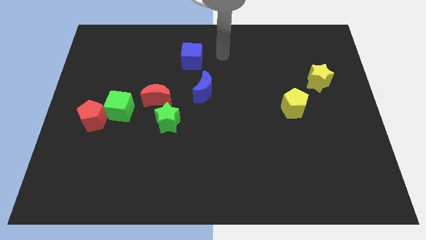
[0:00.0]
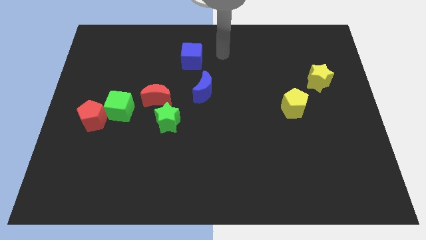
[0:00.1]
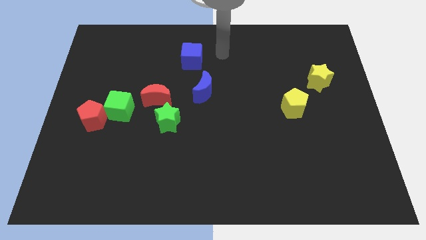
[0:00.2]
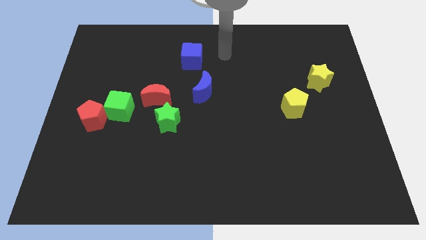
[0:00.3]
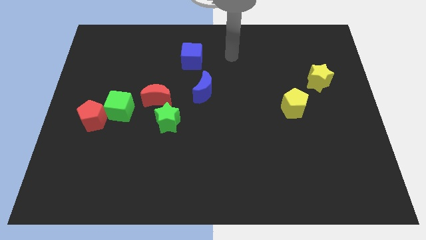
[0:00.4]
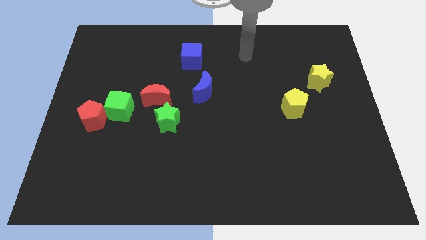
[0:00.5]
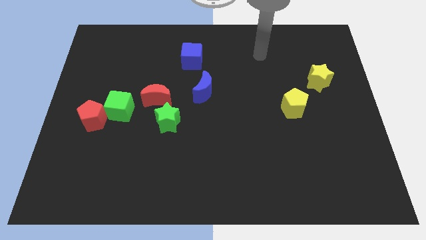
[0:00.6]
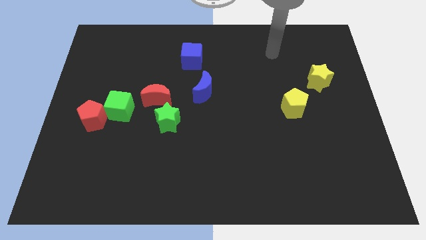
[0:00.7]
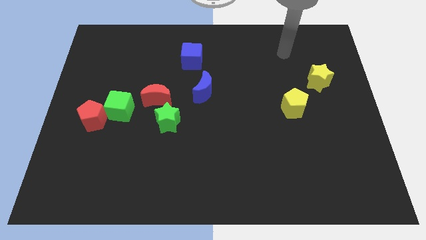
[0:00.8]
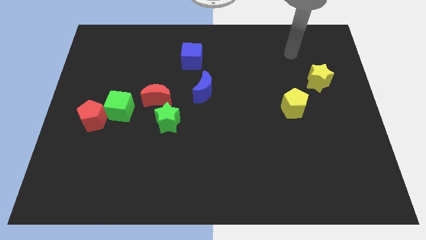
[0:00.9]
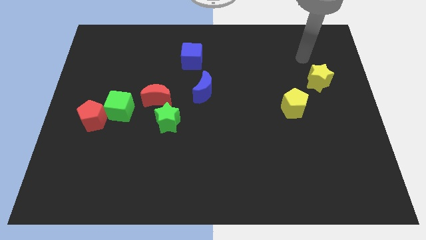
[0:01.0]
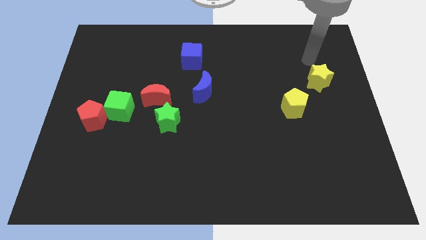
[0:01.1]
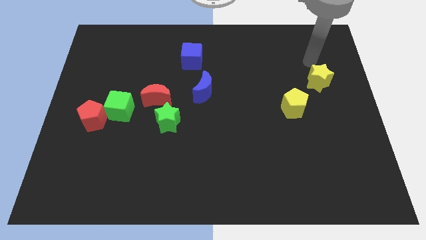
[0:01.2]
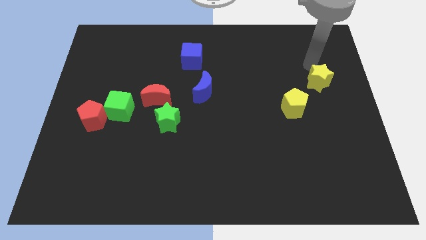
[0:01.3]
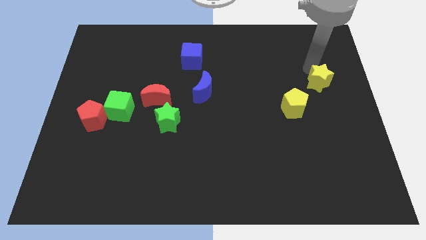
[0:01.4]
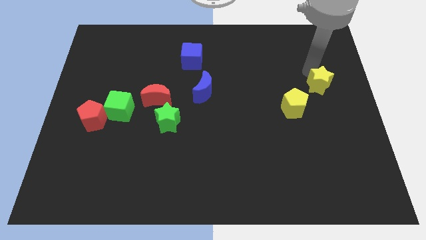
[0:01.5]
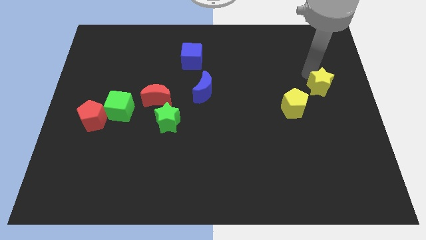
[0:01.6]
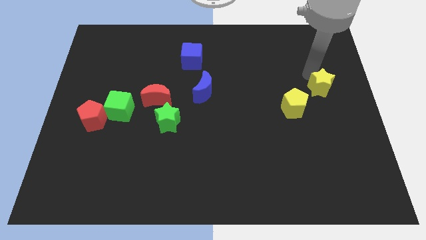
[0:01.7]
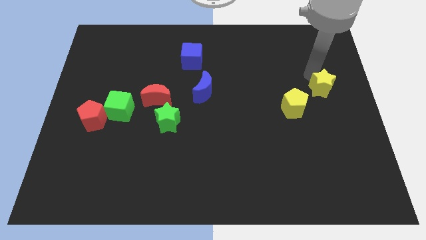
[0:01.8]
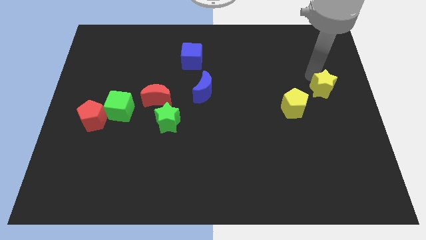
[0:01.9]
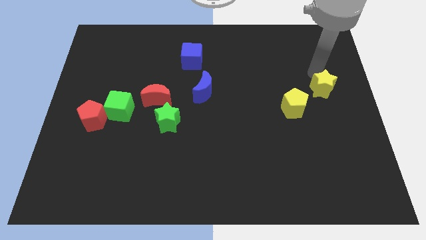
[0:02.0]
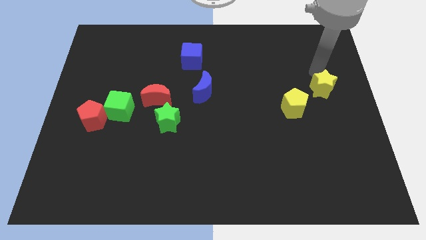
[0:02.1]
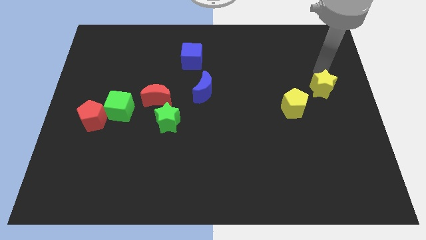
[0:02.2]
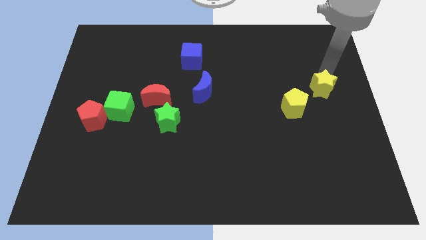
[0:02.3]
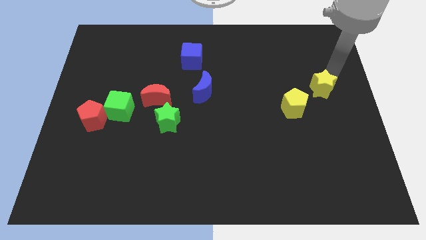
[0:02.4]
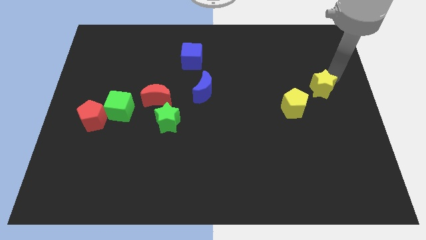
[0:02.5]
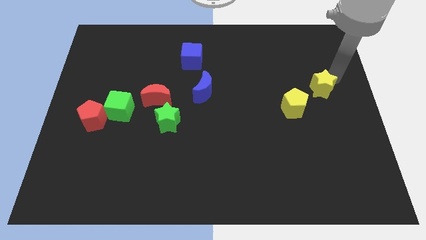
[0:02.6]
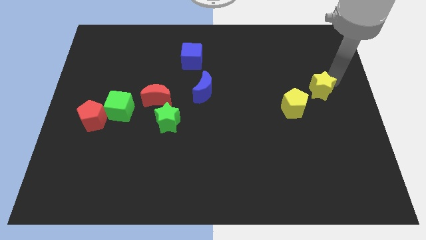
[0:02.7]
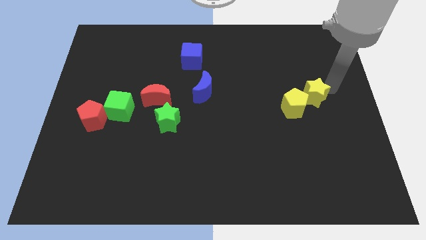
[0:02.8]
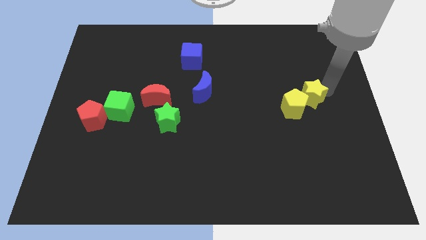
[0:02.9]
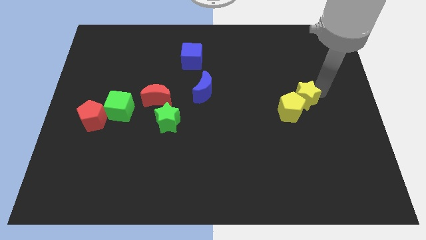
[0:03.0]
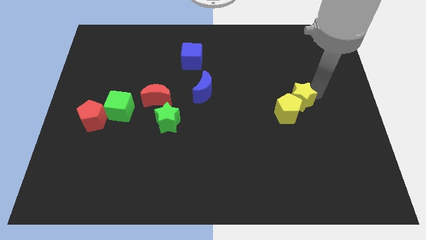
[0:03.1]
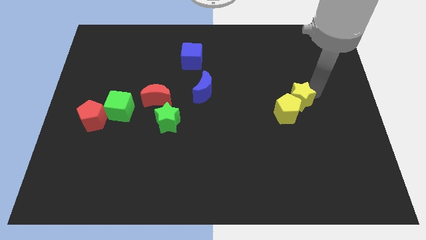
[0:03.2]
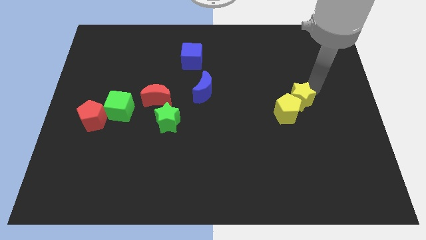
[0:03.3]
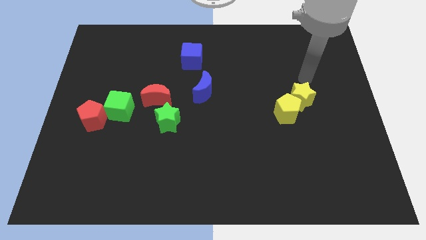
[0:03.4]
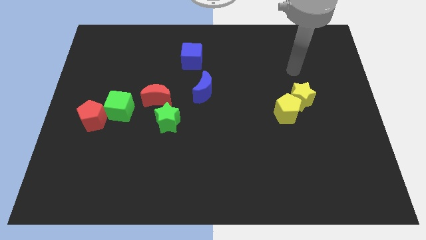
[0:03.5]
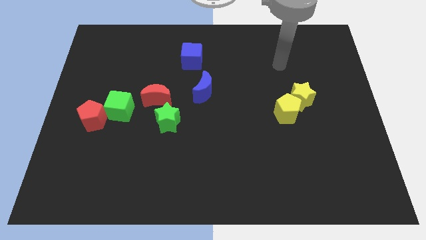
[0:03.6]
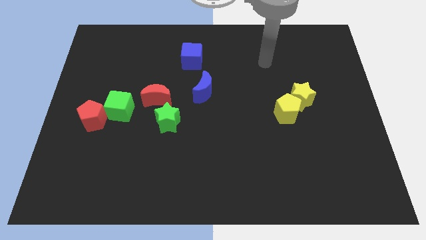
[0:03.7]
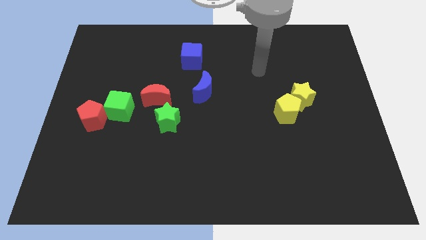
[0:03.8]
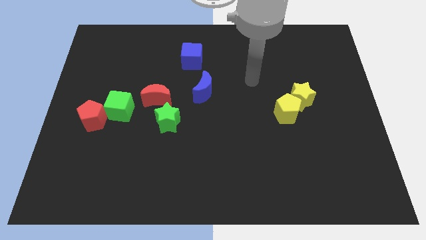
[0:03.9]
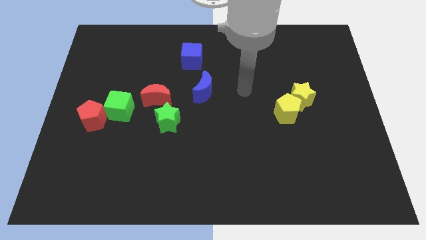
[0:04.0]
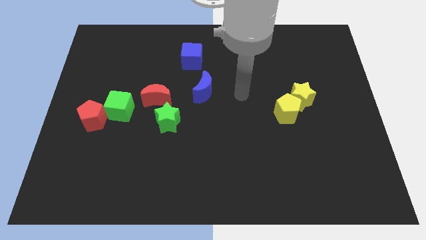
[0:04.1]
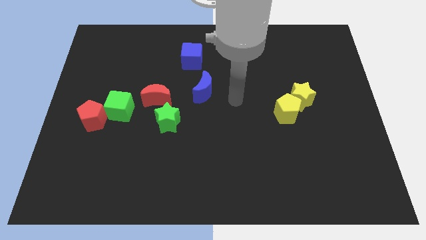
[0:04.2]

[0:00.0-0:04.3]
move yellow star and yellow pentagon slightly downwards

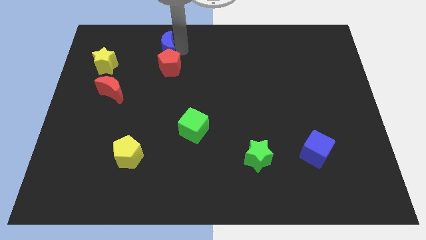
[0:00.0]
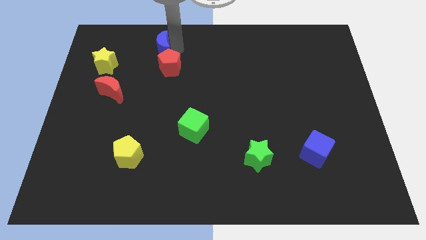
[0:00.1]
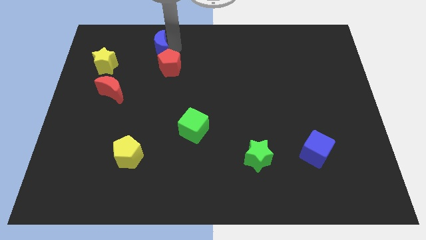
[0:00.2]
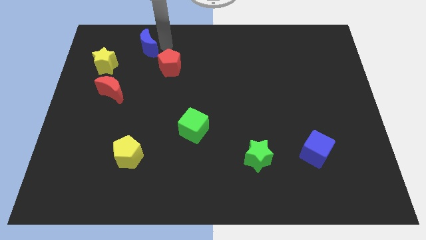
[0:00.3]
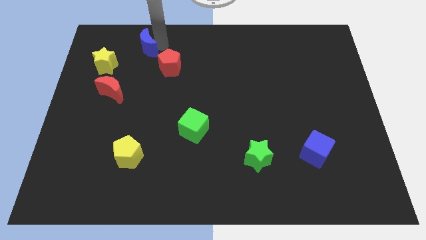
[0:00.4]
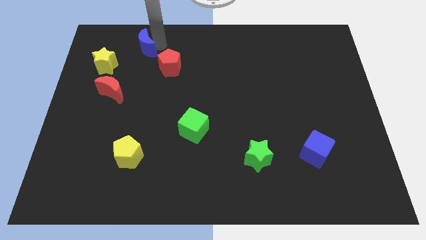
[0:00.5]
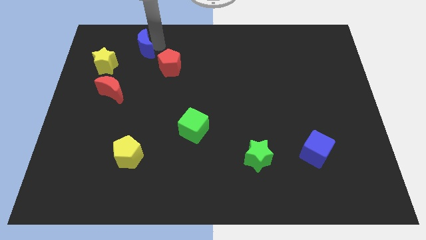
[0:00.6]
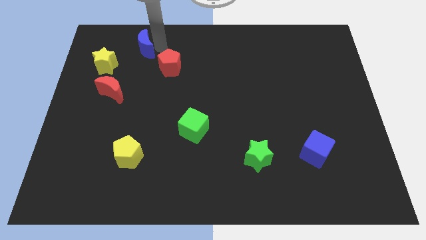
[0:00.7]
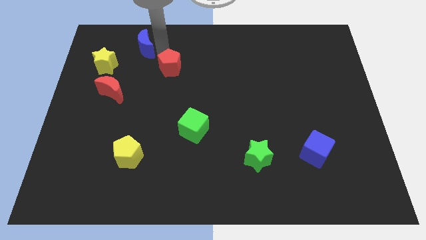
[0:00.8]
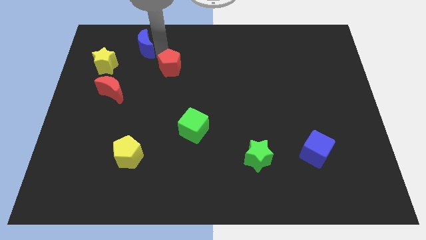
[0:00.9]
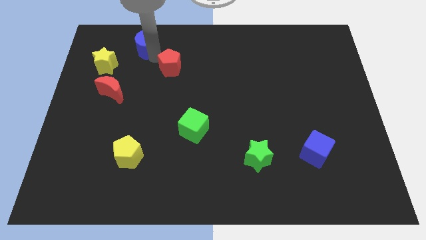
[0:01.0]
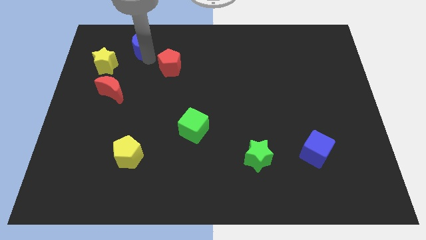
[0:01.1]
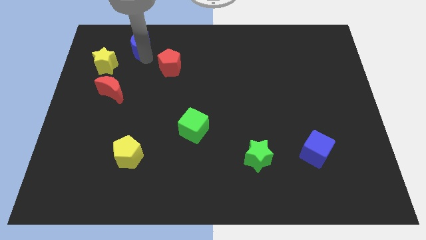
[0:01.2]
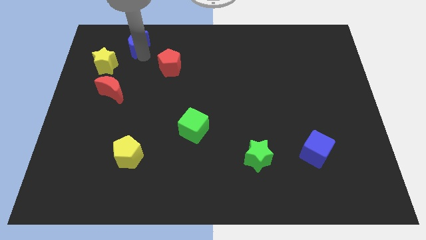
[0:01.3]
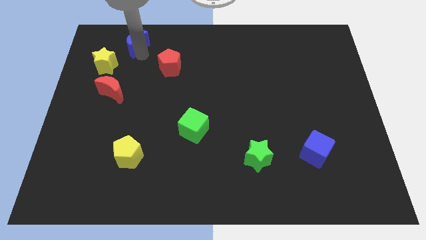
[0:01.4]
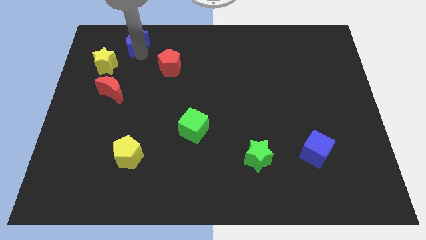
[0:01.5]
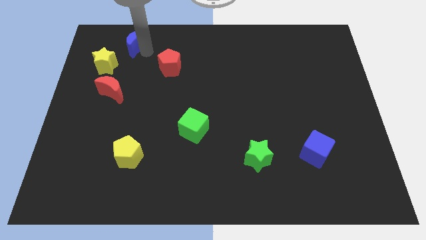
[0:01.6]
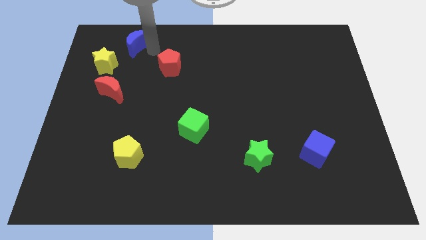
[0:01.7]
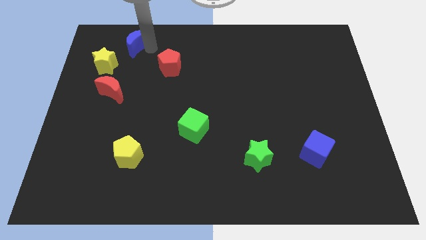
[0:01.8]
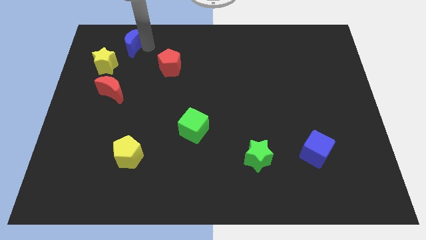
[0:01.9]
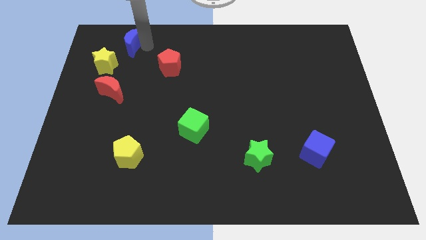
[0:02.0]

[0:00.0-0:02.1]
move the blue moon away from the top side of the red pentagon

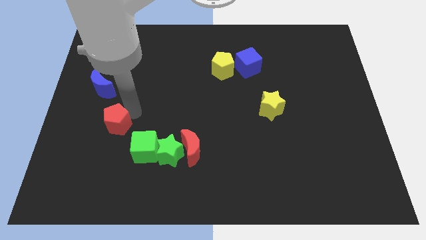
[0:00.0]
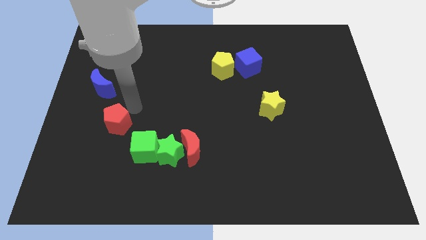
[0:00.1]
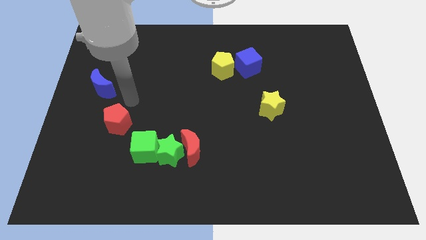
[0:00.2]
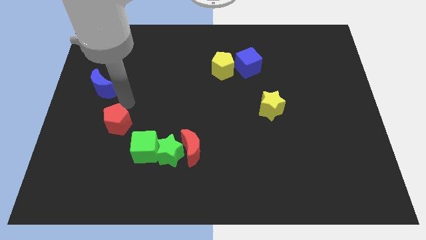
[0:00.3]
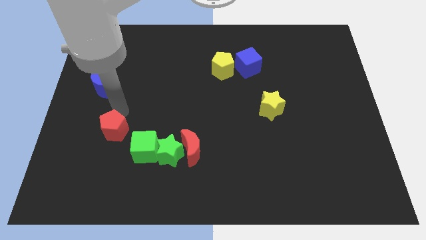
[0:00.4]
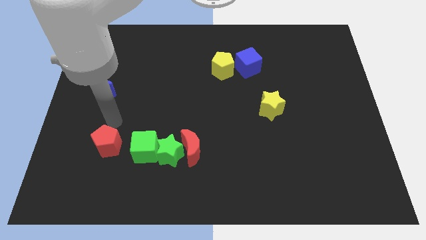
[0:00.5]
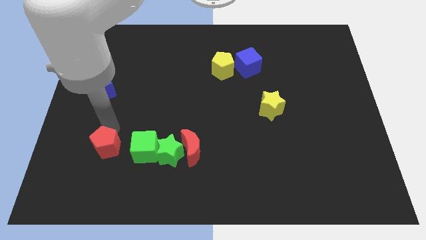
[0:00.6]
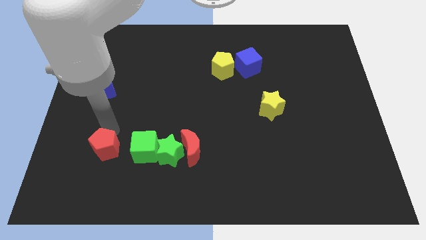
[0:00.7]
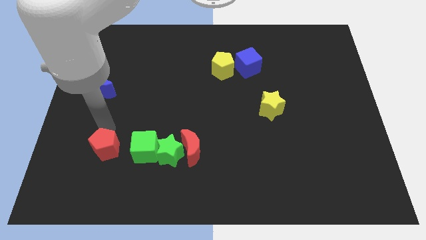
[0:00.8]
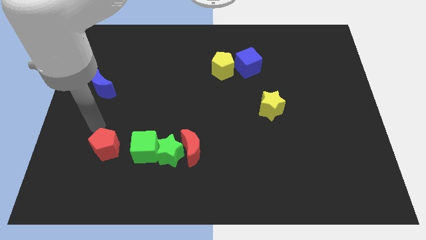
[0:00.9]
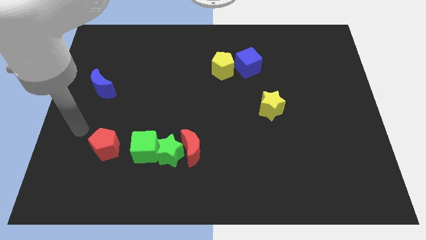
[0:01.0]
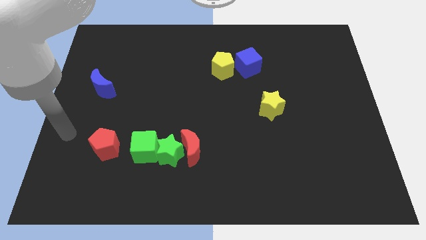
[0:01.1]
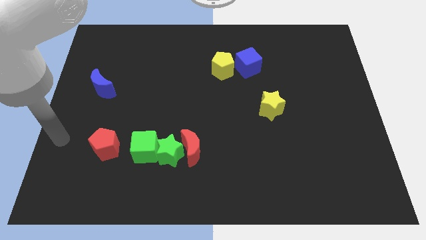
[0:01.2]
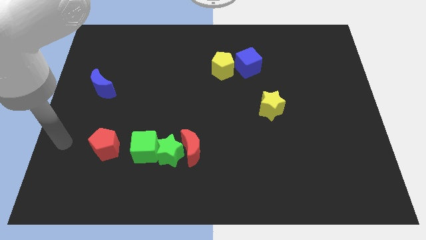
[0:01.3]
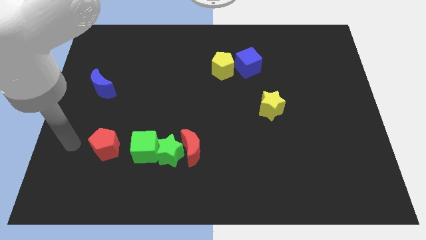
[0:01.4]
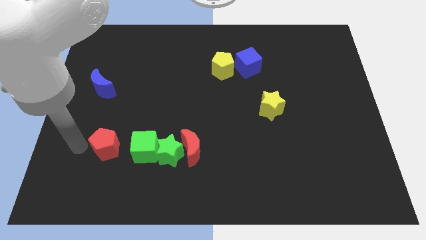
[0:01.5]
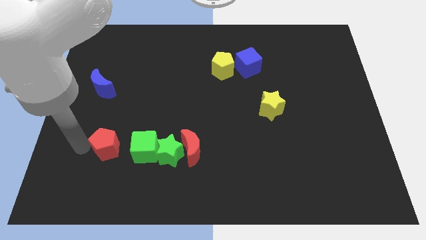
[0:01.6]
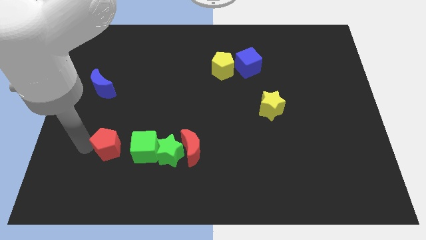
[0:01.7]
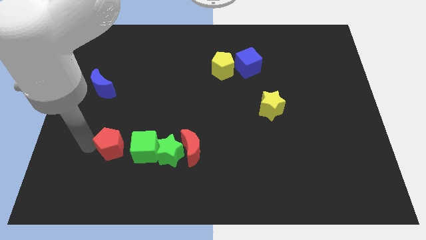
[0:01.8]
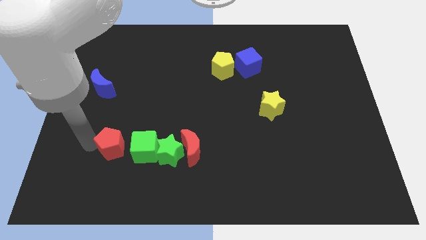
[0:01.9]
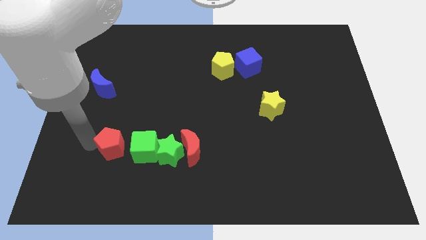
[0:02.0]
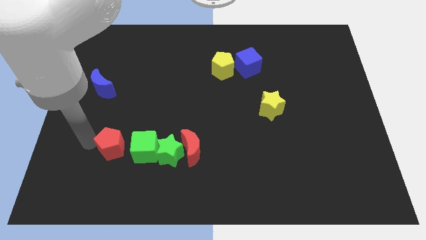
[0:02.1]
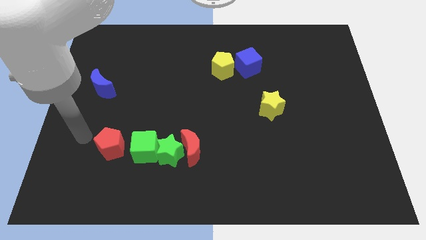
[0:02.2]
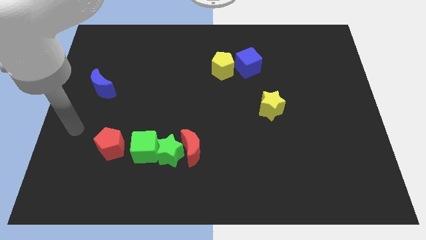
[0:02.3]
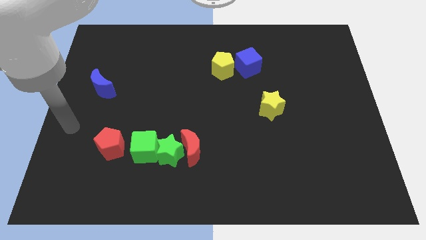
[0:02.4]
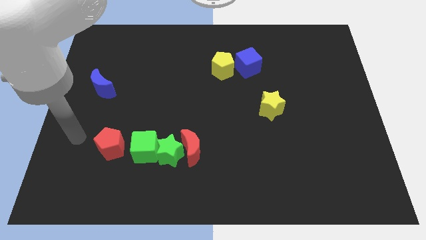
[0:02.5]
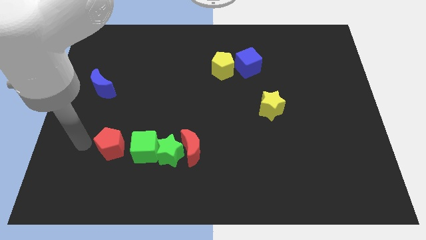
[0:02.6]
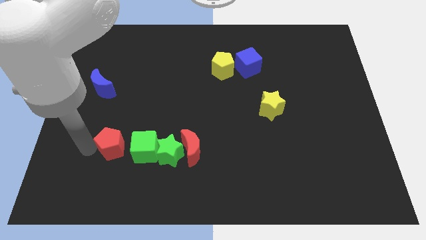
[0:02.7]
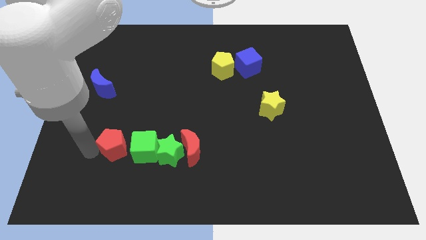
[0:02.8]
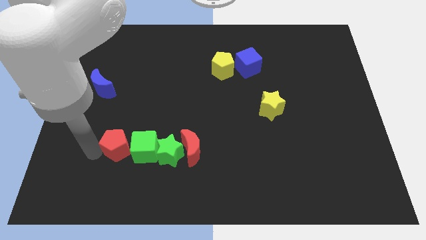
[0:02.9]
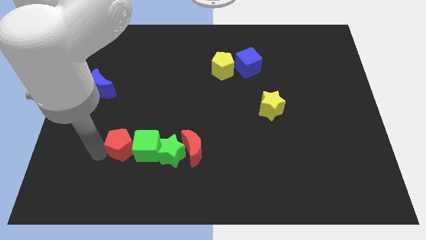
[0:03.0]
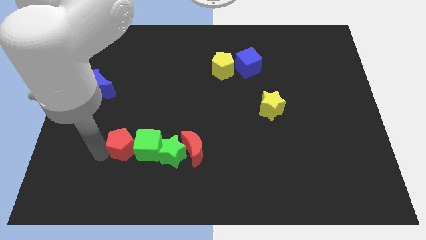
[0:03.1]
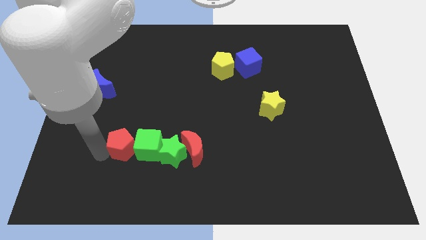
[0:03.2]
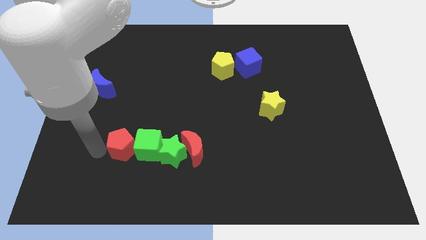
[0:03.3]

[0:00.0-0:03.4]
move the red pentagon into the green cube
